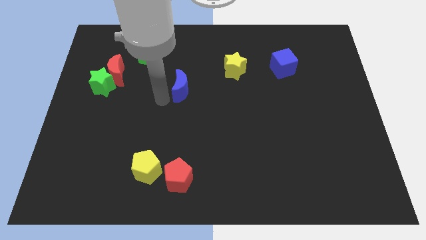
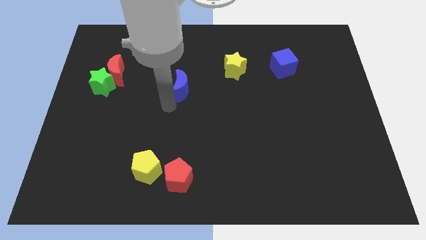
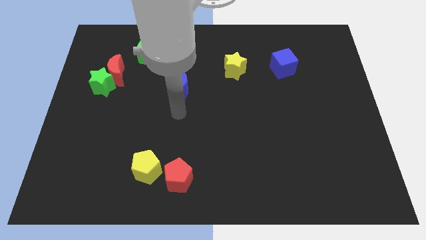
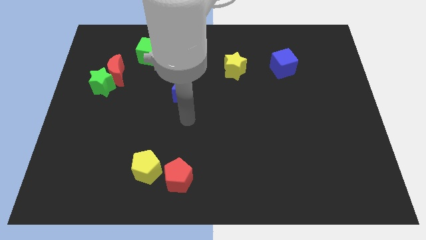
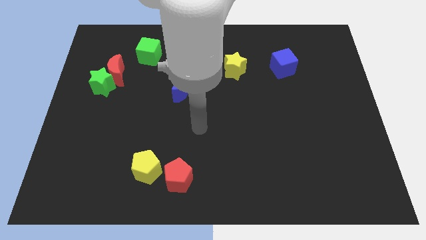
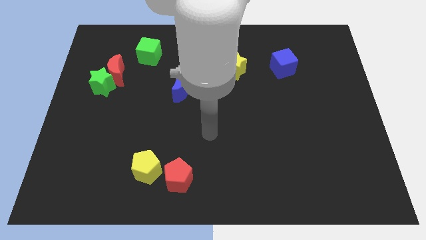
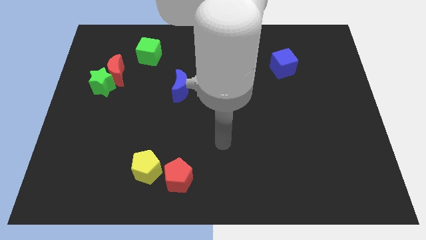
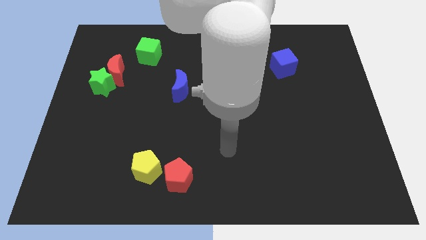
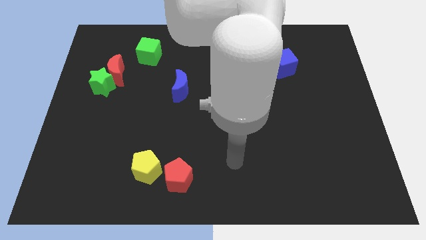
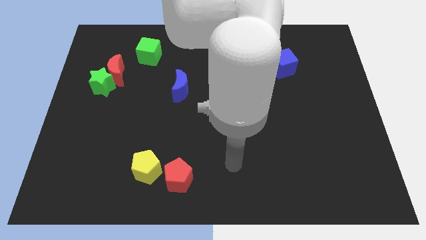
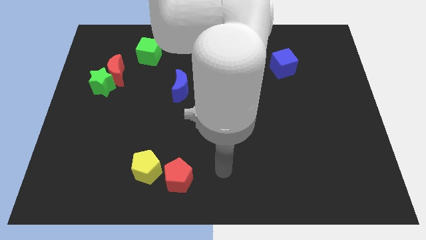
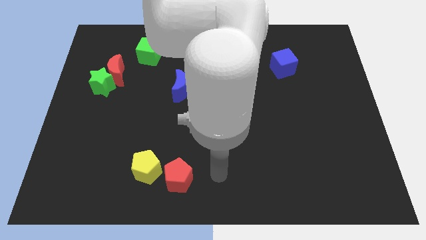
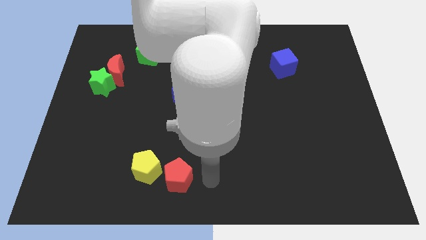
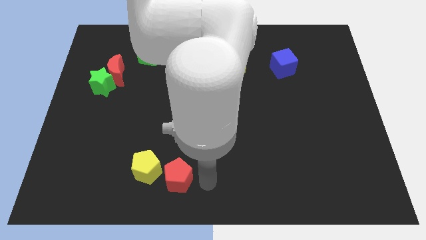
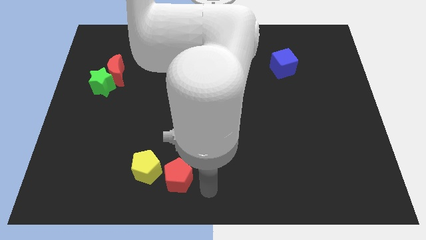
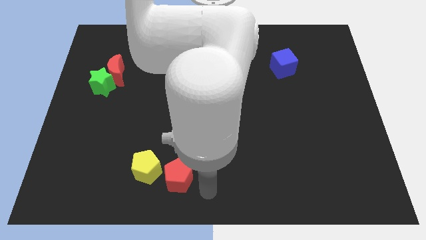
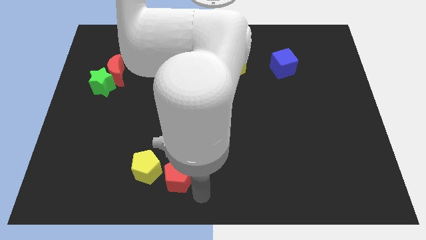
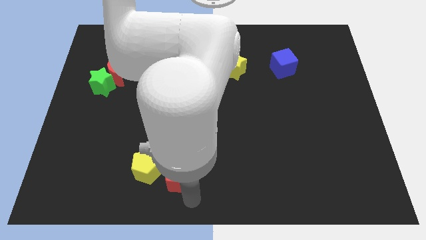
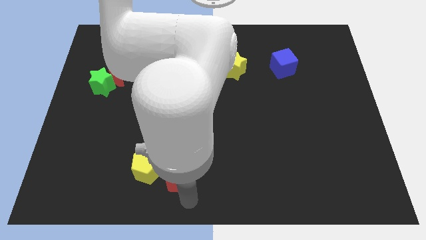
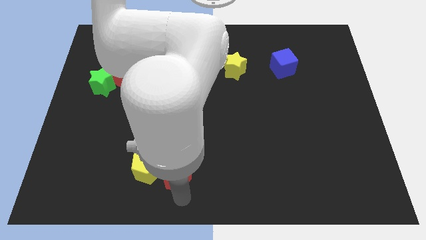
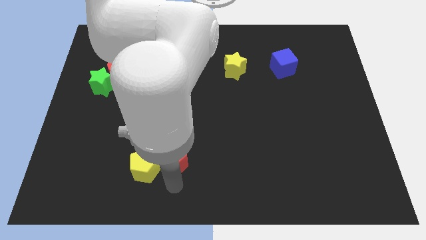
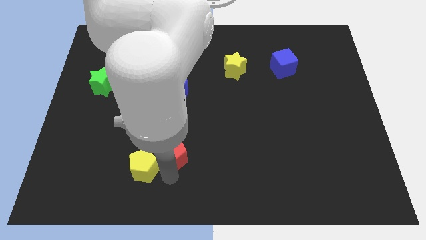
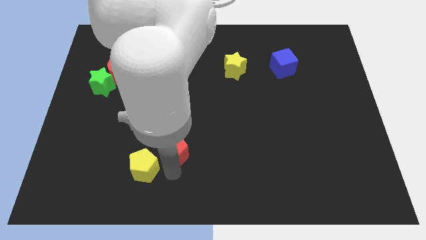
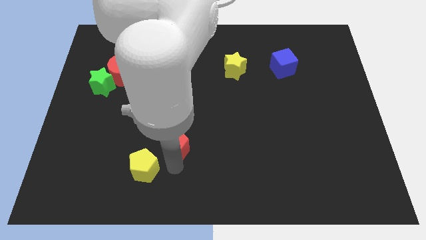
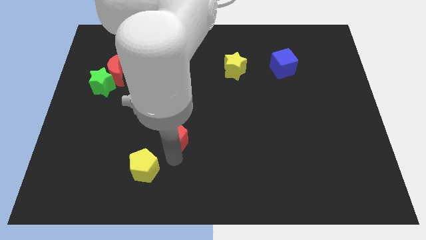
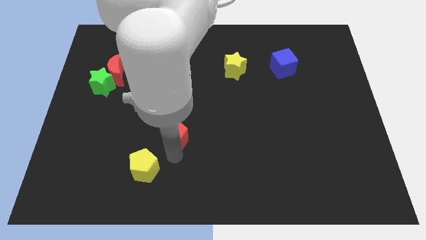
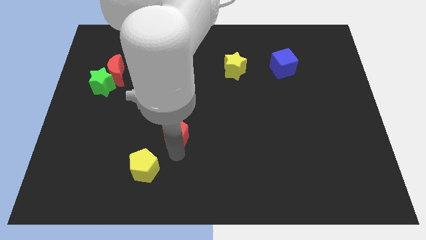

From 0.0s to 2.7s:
separate red pentagon from yellow pentagon

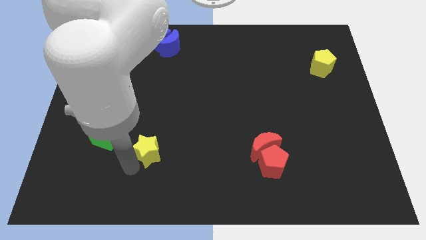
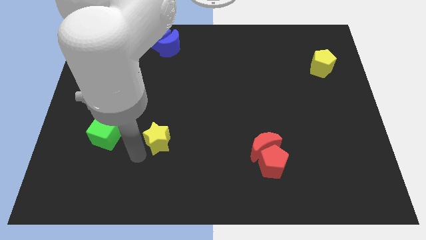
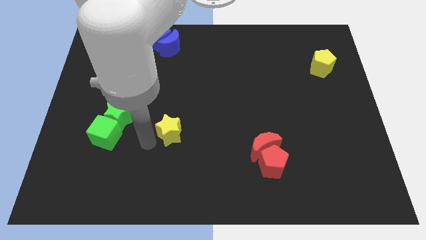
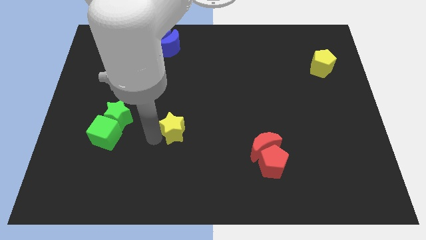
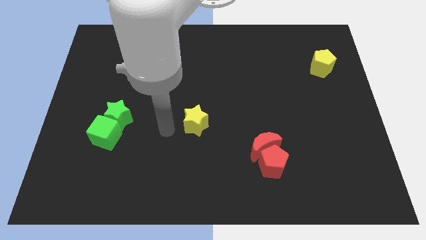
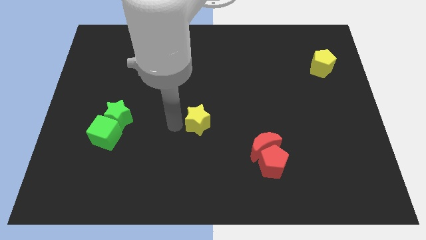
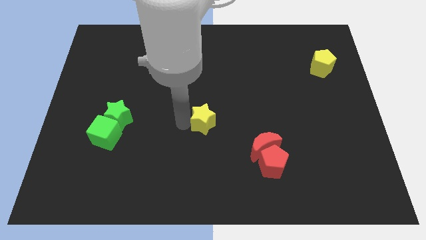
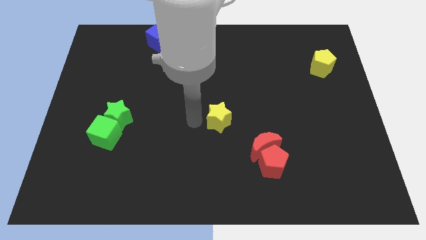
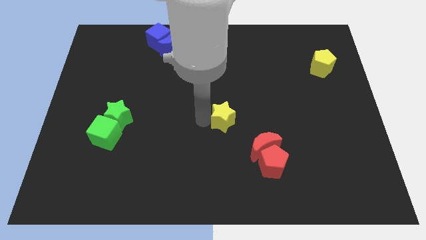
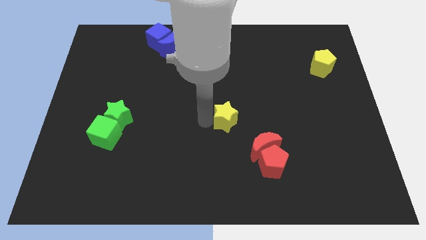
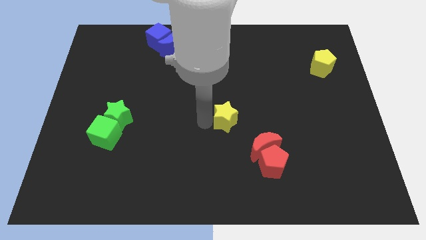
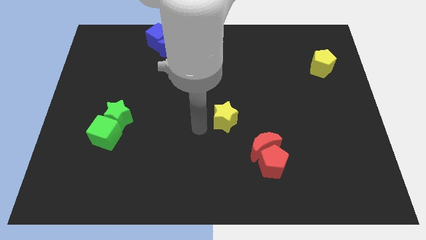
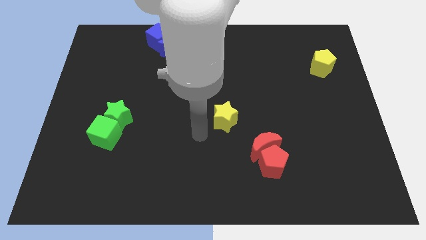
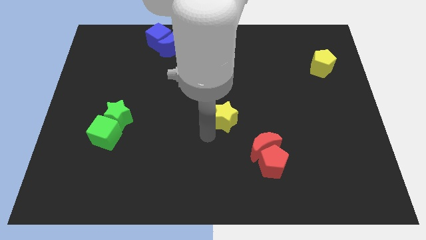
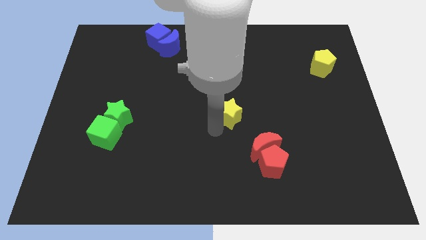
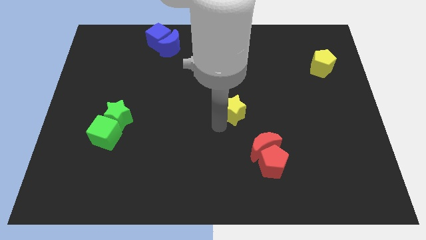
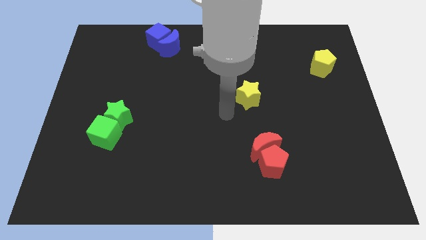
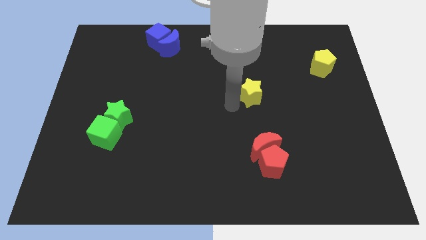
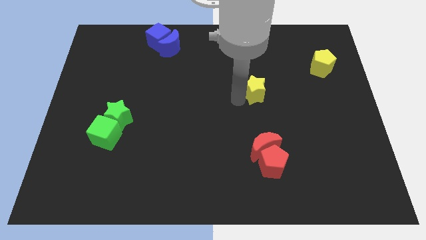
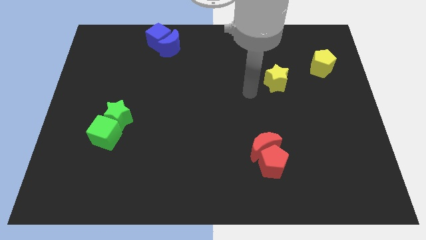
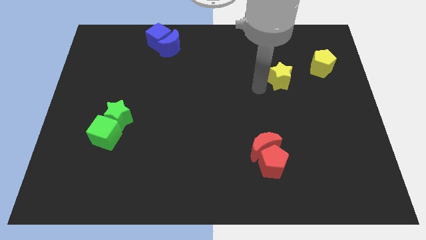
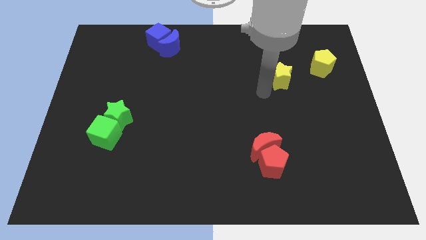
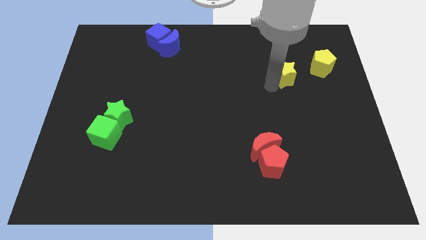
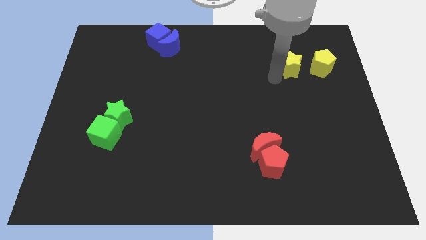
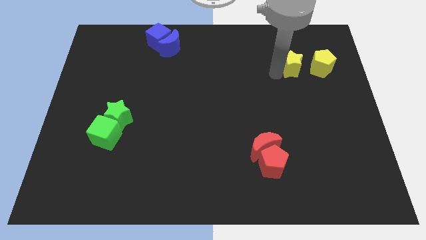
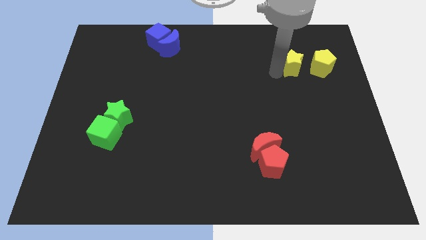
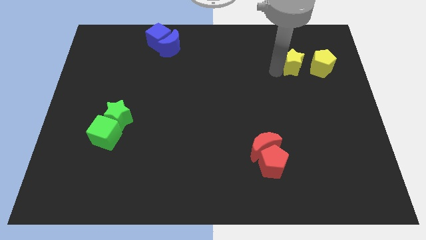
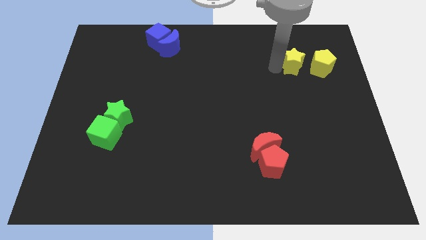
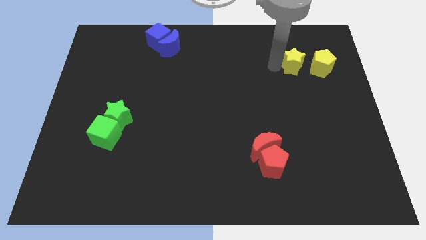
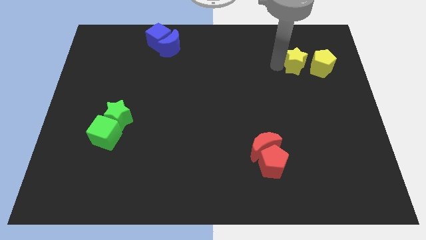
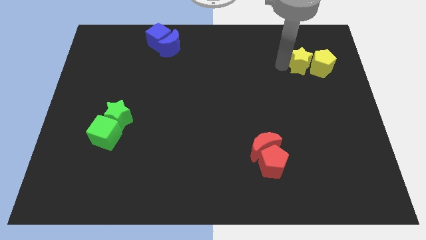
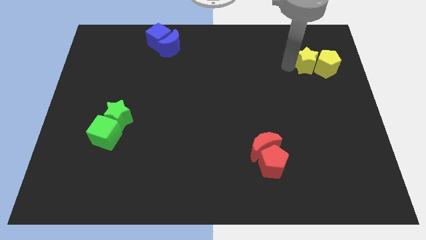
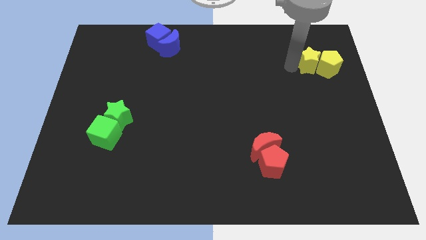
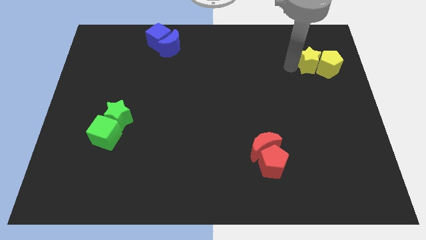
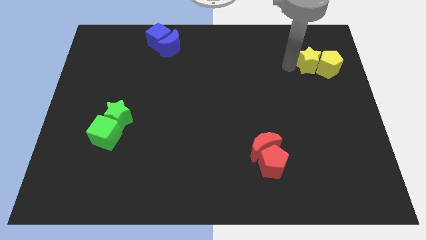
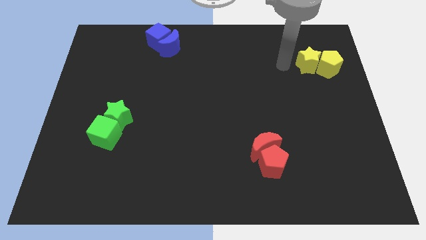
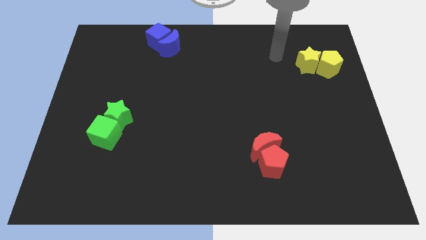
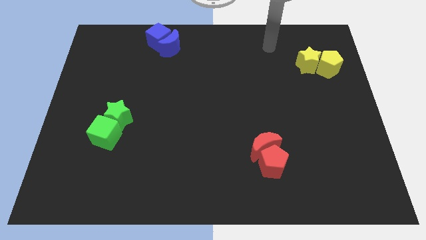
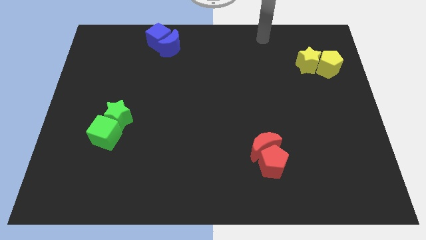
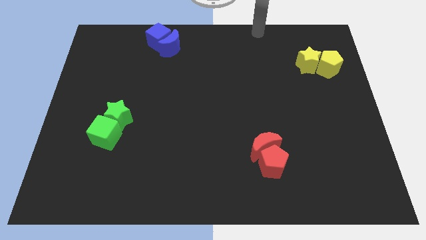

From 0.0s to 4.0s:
move the yellow star into the yellow pentagon

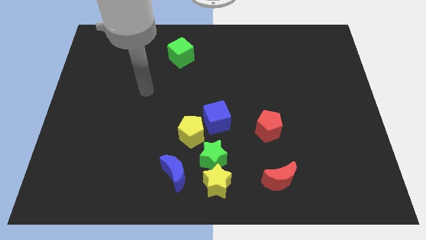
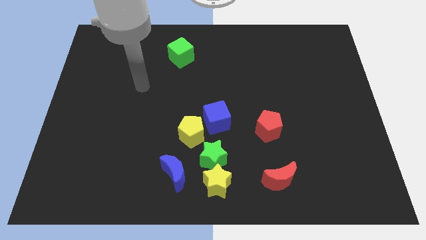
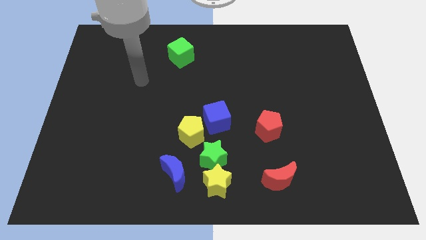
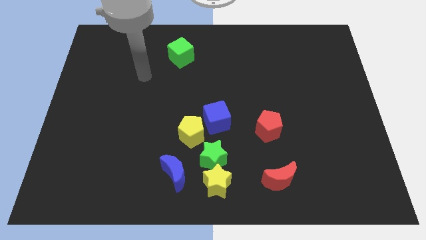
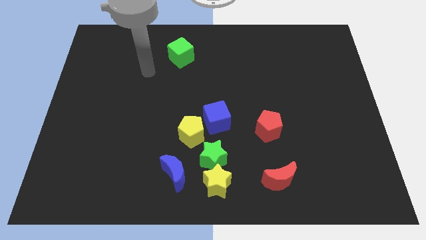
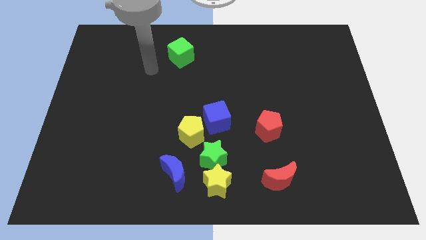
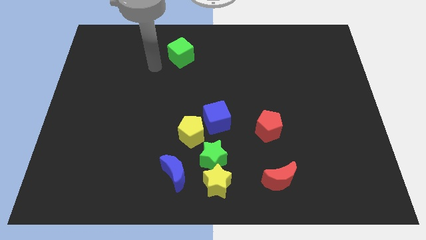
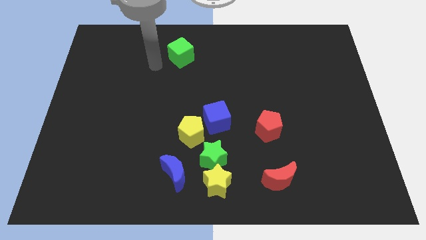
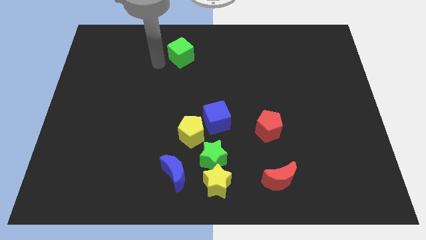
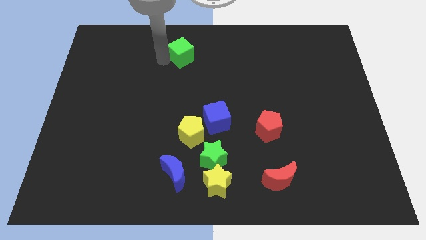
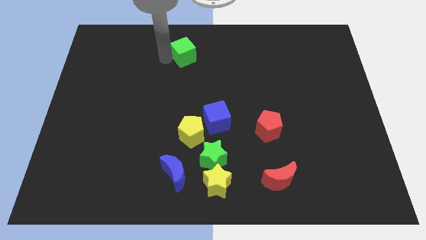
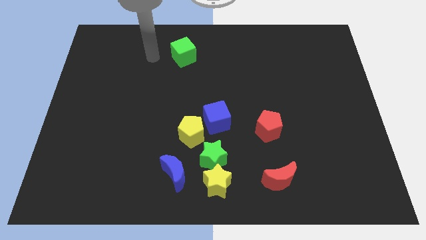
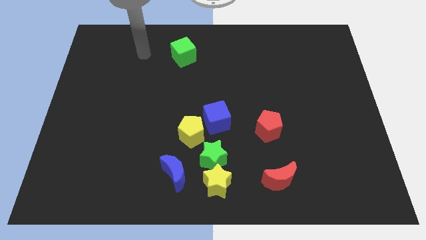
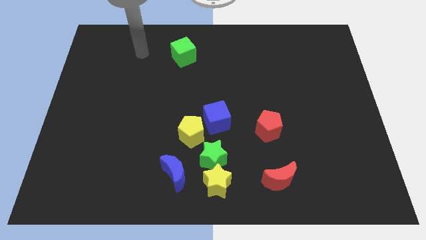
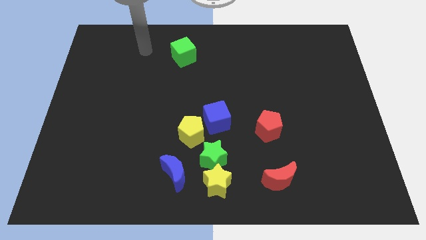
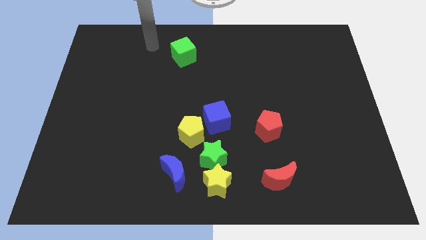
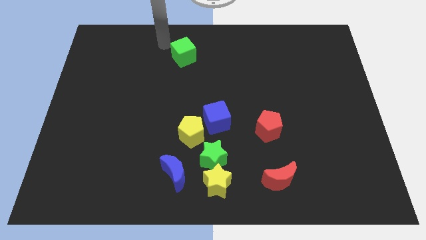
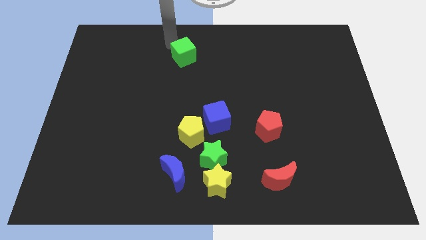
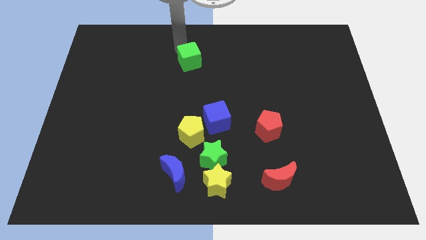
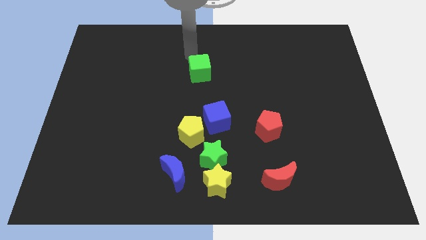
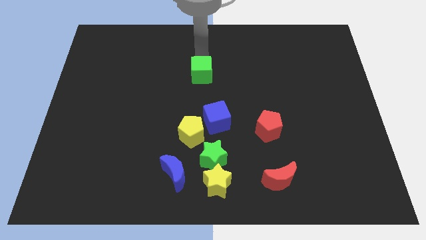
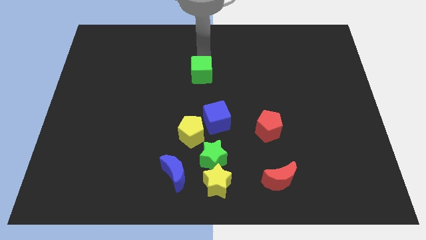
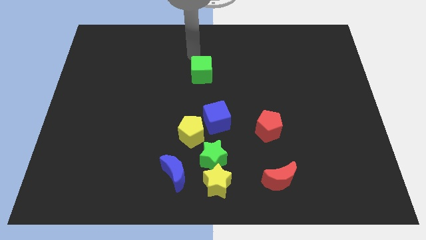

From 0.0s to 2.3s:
push the green cube on top of blue cube
